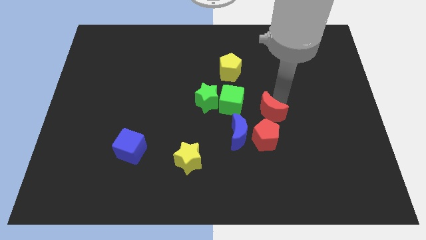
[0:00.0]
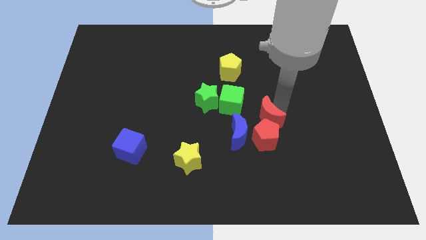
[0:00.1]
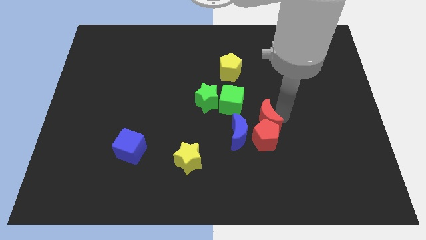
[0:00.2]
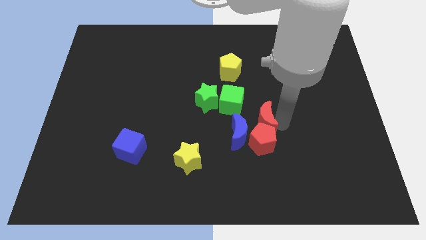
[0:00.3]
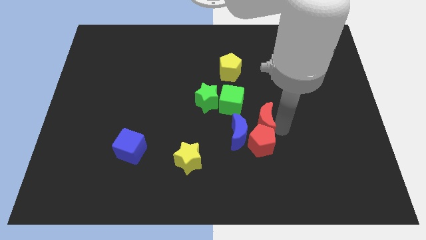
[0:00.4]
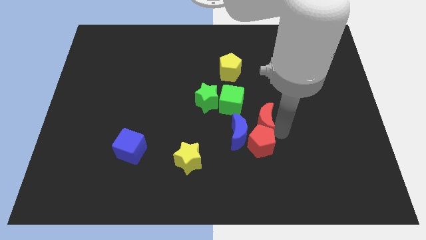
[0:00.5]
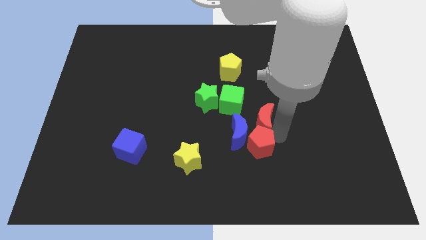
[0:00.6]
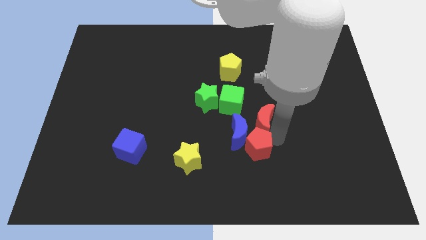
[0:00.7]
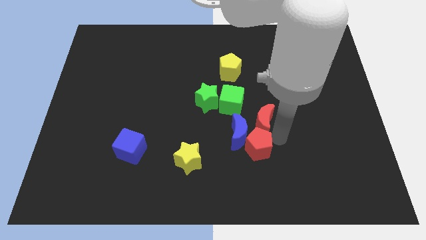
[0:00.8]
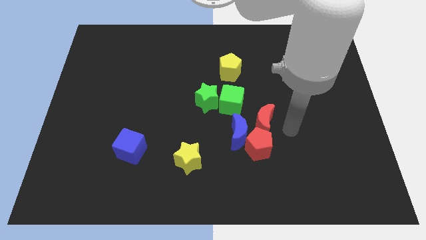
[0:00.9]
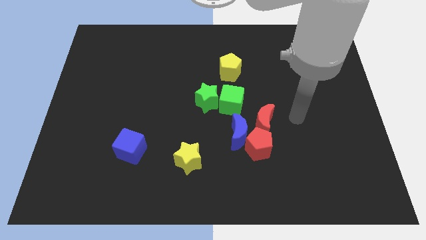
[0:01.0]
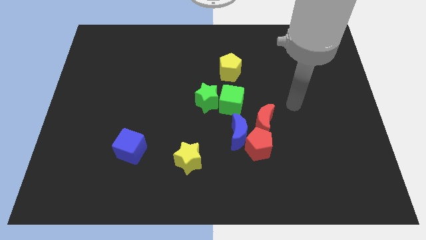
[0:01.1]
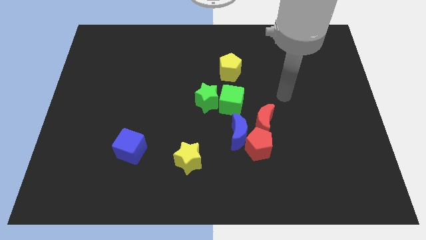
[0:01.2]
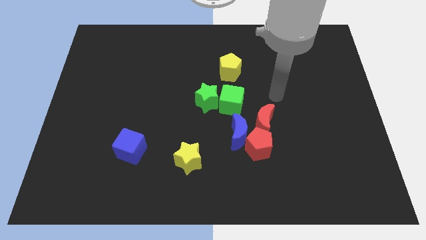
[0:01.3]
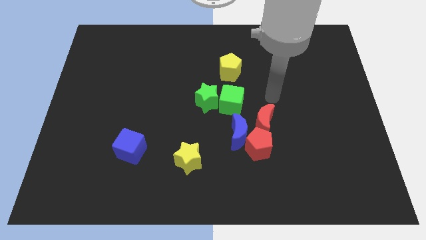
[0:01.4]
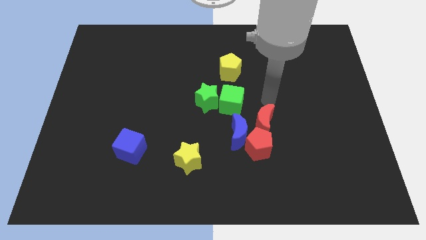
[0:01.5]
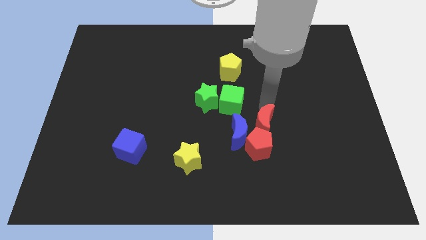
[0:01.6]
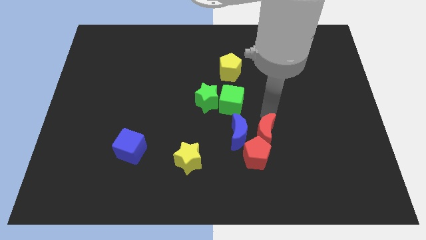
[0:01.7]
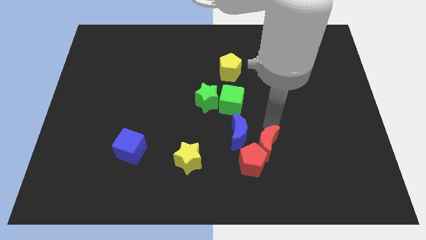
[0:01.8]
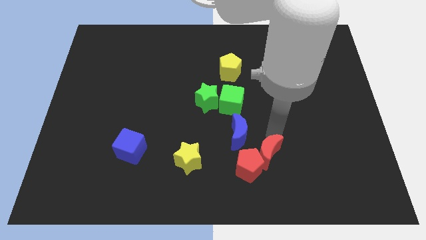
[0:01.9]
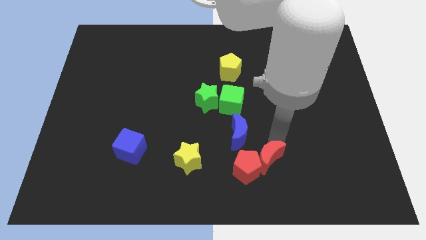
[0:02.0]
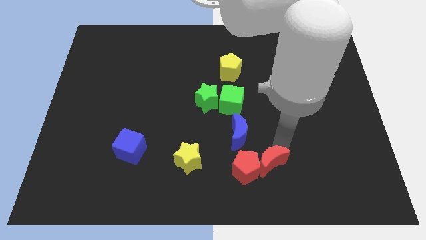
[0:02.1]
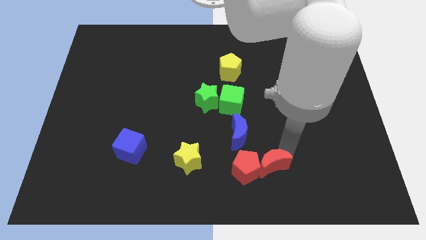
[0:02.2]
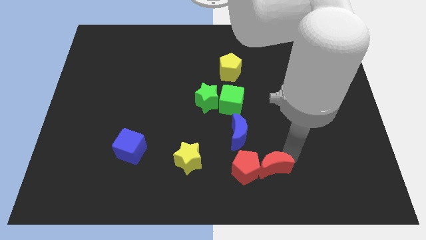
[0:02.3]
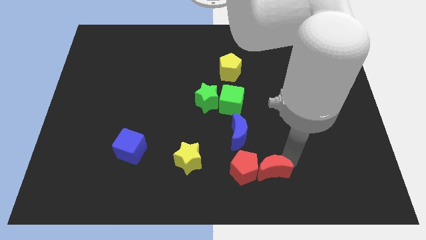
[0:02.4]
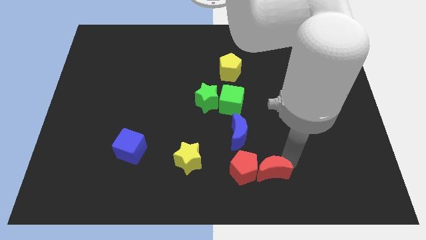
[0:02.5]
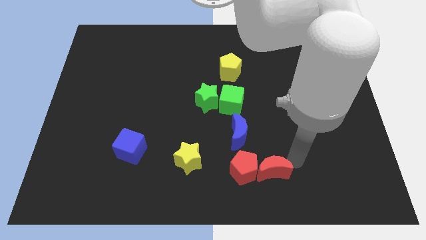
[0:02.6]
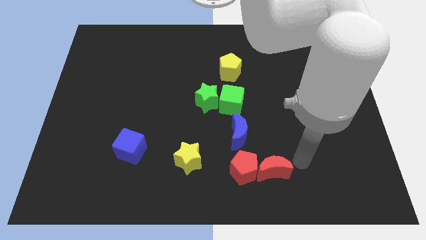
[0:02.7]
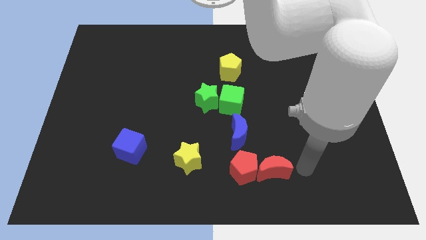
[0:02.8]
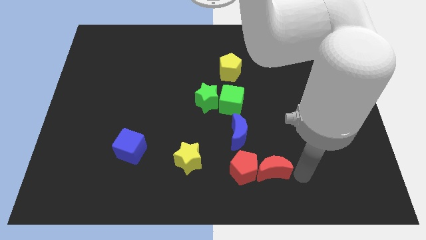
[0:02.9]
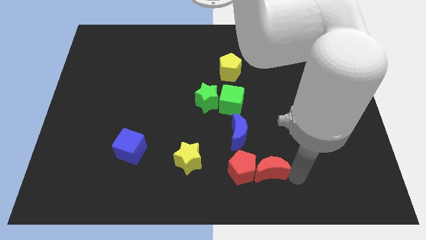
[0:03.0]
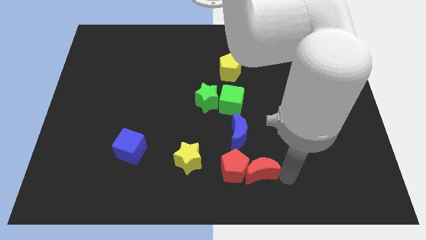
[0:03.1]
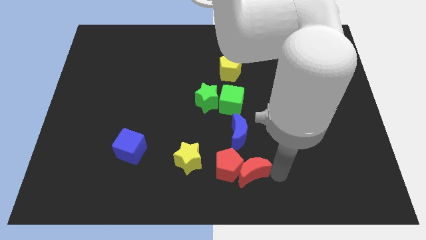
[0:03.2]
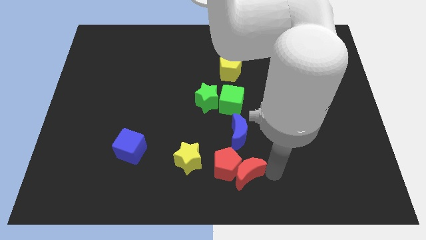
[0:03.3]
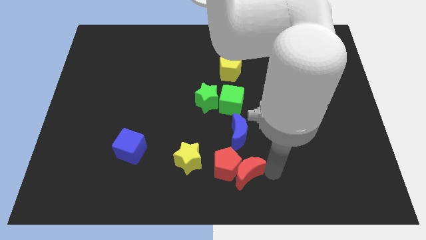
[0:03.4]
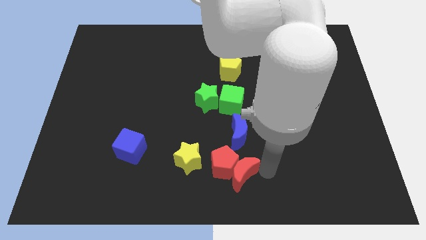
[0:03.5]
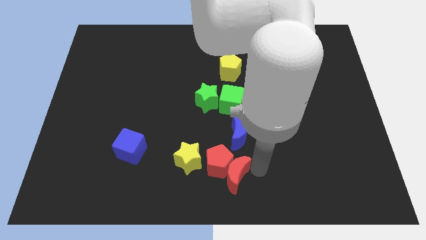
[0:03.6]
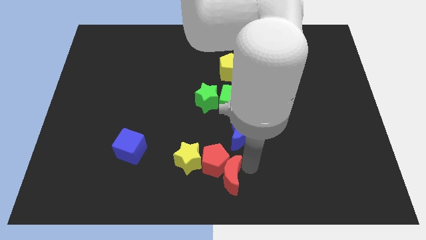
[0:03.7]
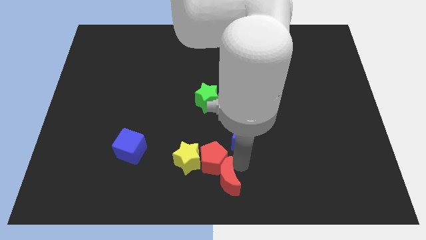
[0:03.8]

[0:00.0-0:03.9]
move the red pentagon and red moon to the right of the yellow star

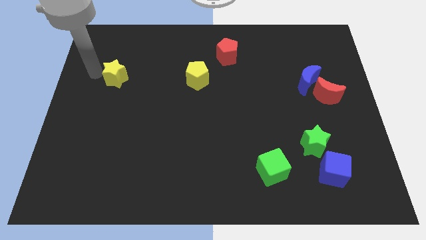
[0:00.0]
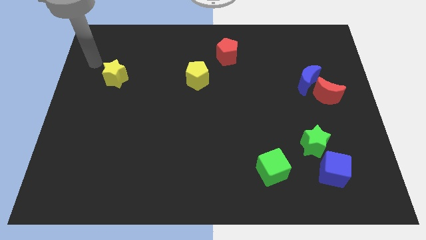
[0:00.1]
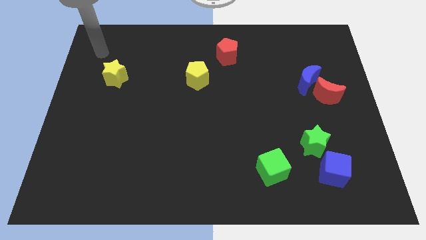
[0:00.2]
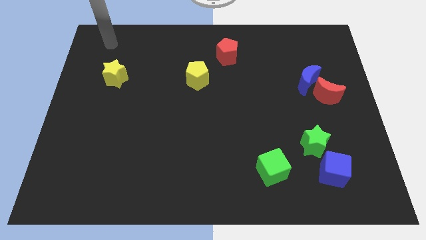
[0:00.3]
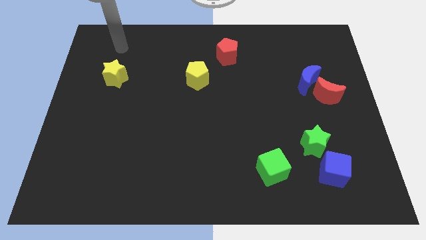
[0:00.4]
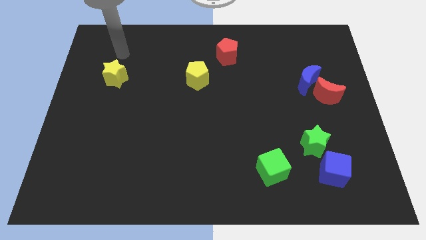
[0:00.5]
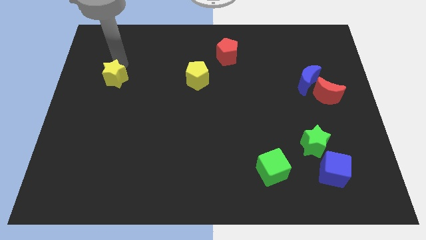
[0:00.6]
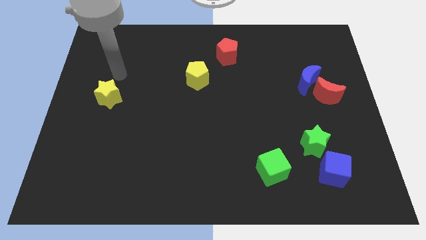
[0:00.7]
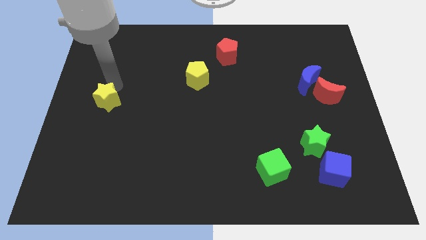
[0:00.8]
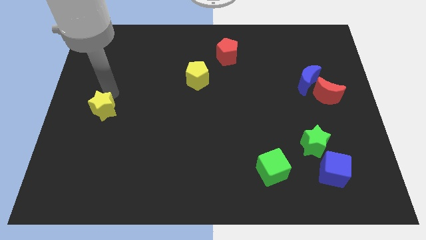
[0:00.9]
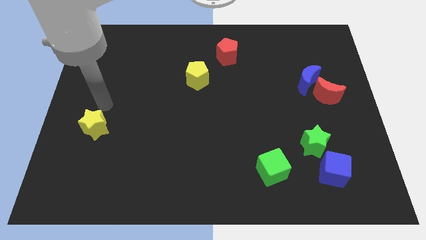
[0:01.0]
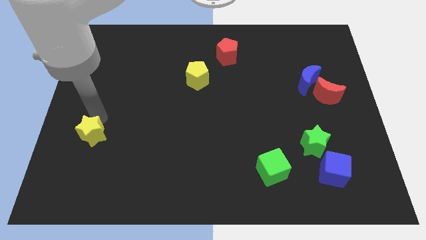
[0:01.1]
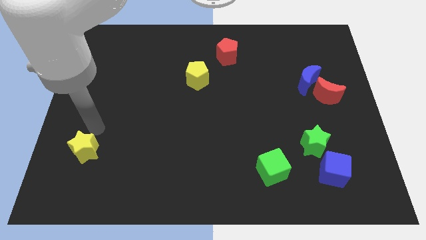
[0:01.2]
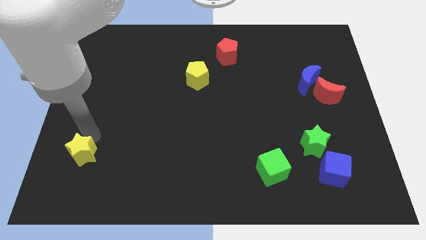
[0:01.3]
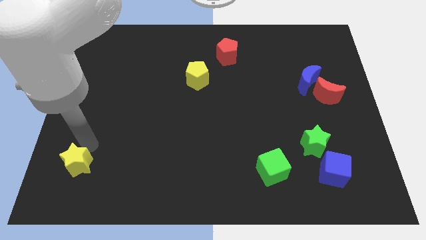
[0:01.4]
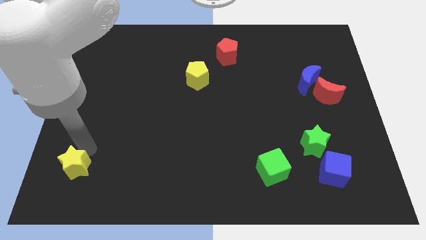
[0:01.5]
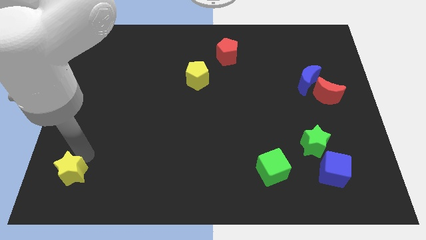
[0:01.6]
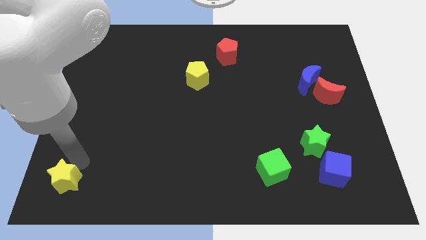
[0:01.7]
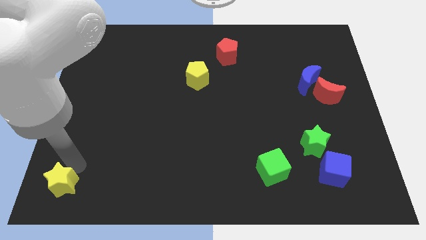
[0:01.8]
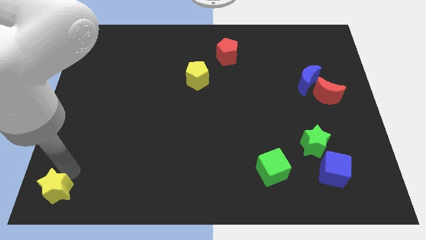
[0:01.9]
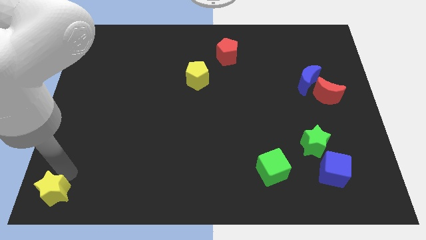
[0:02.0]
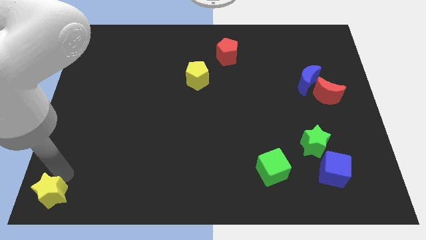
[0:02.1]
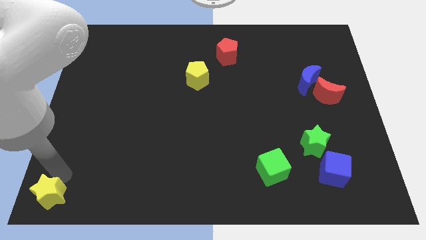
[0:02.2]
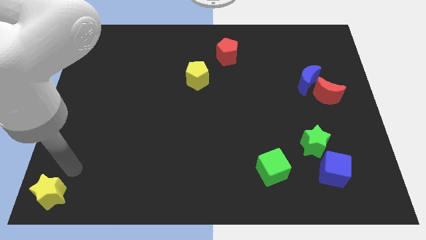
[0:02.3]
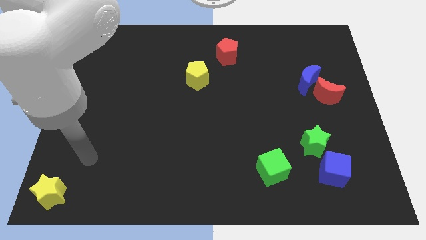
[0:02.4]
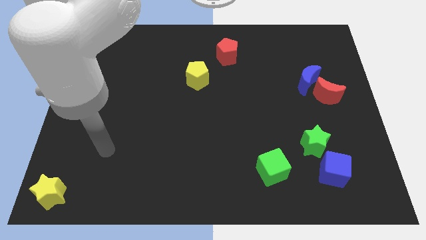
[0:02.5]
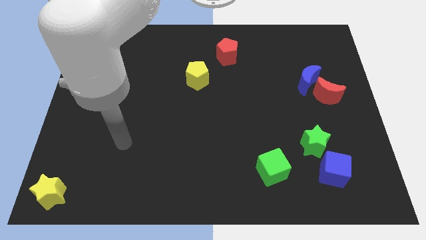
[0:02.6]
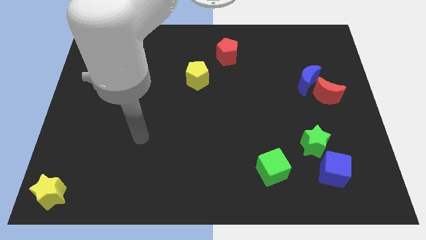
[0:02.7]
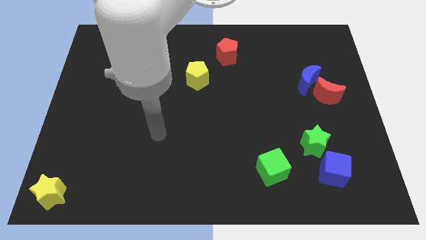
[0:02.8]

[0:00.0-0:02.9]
move the yellow star to the bottom left

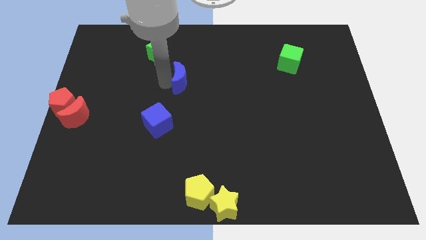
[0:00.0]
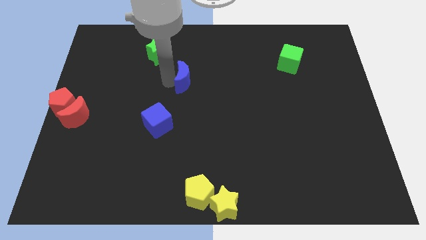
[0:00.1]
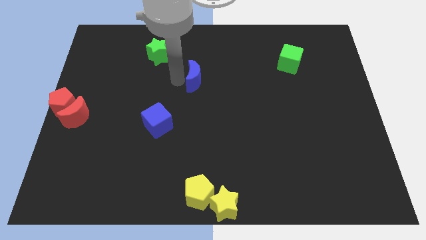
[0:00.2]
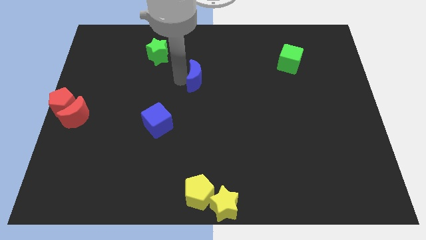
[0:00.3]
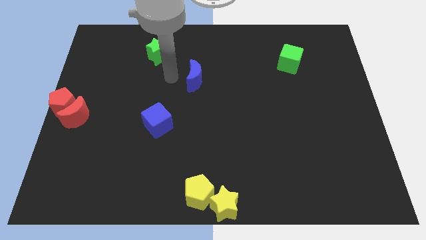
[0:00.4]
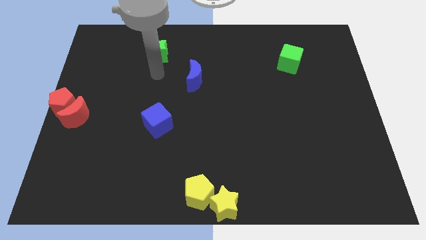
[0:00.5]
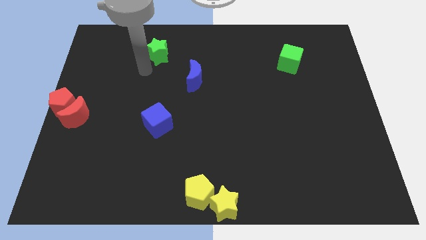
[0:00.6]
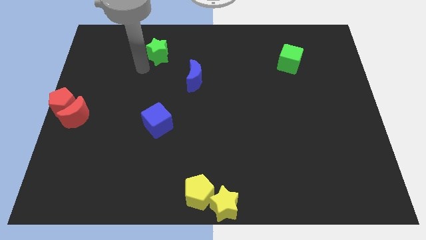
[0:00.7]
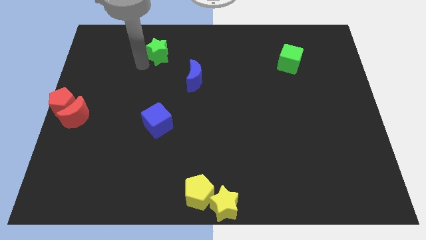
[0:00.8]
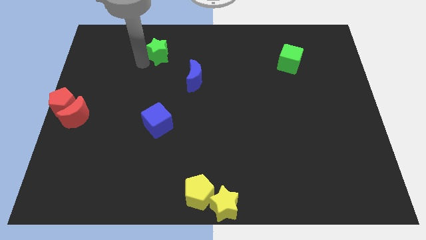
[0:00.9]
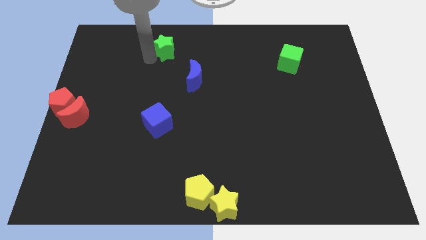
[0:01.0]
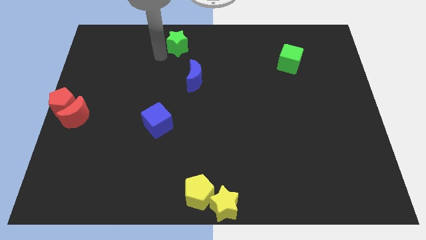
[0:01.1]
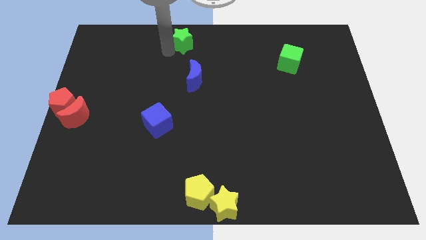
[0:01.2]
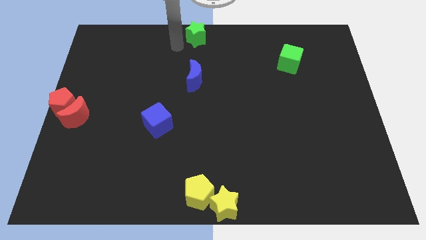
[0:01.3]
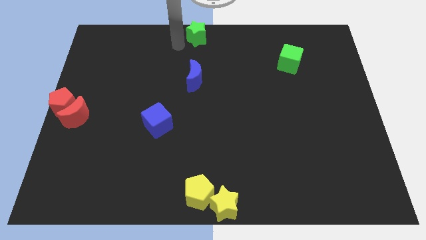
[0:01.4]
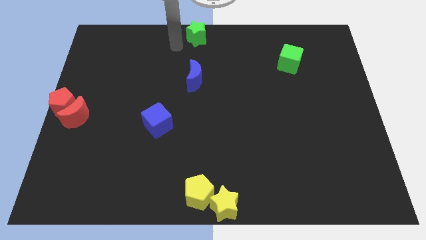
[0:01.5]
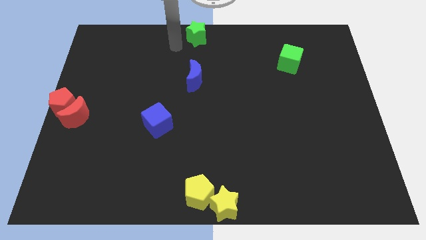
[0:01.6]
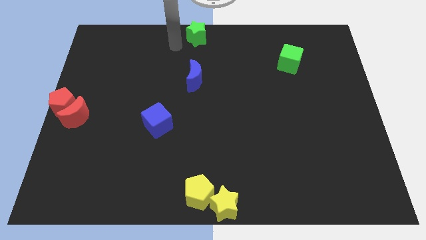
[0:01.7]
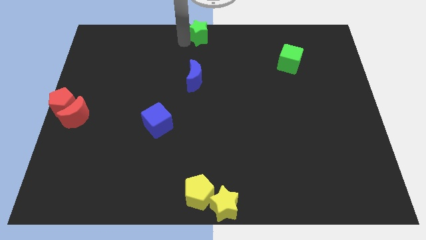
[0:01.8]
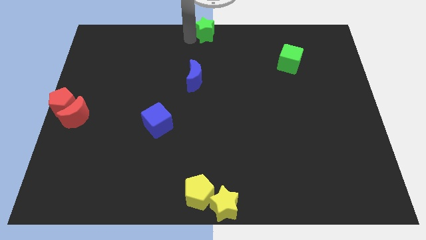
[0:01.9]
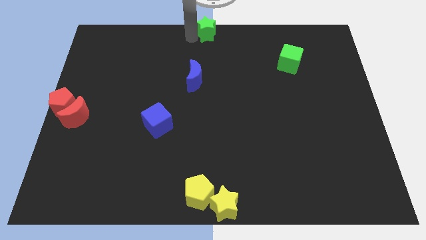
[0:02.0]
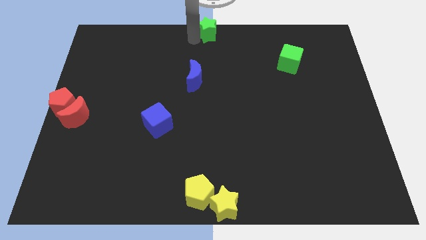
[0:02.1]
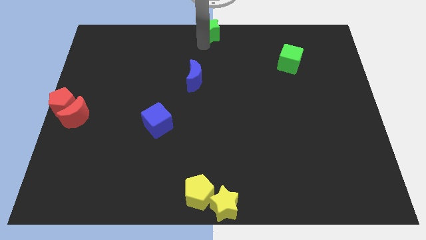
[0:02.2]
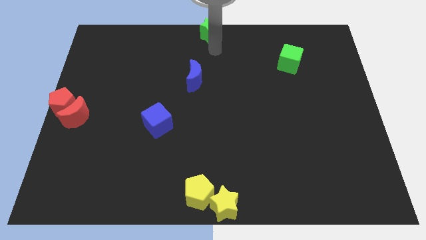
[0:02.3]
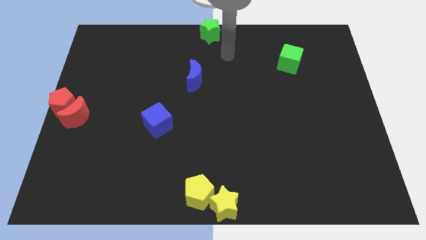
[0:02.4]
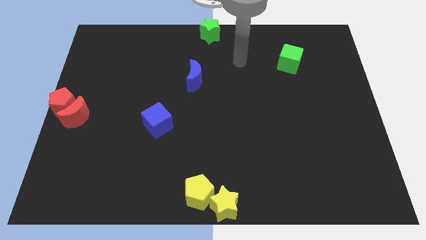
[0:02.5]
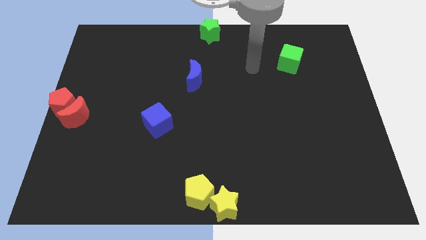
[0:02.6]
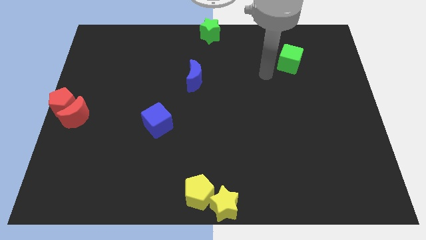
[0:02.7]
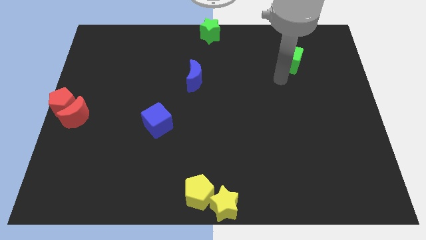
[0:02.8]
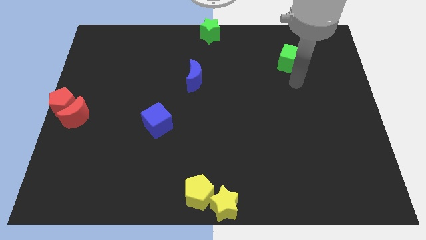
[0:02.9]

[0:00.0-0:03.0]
put the green star to the top center
